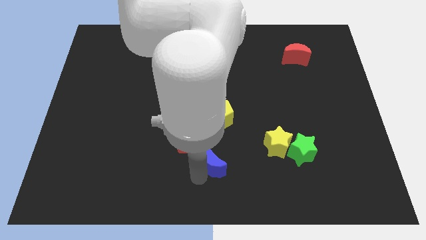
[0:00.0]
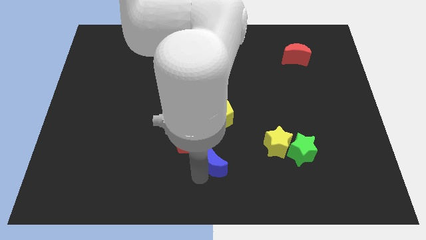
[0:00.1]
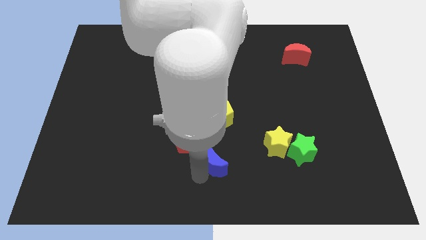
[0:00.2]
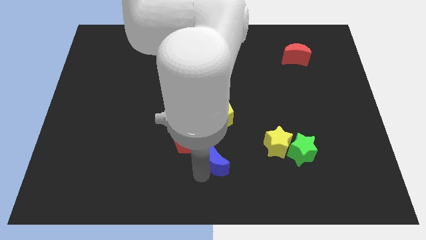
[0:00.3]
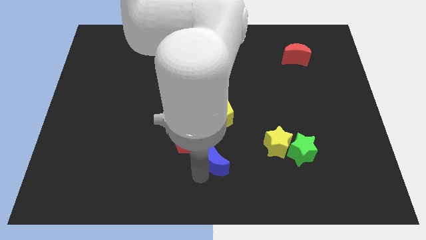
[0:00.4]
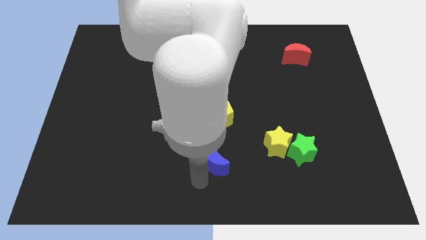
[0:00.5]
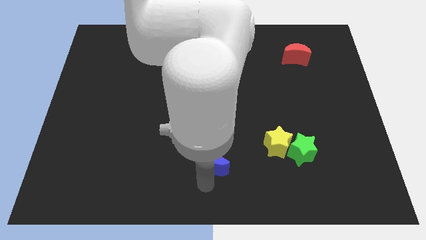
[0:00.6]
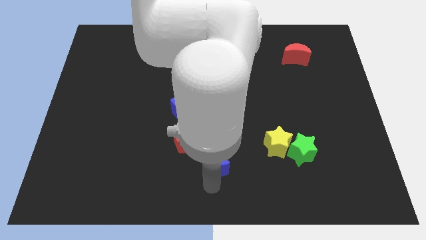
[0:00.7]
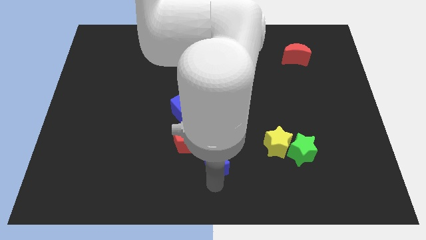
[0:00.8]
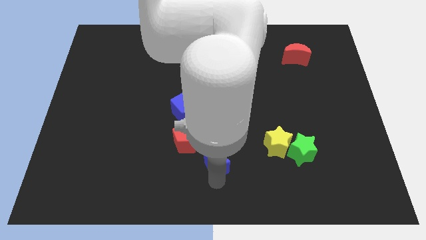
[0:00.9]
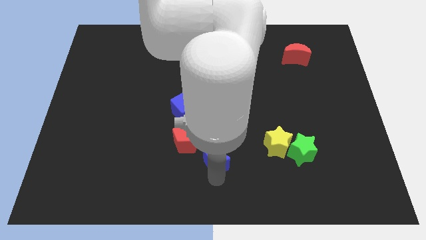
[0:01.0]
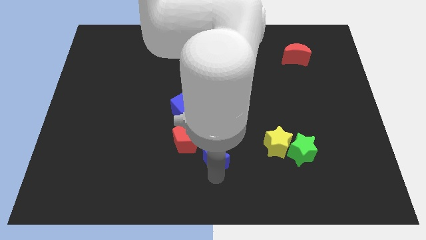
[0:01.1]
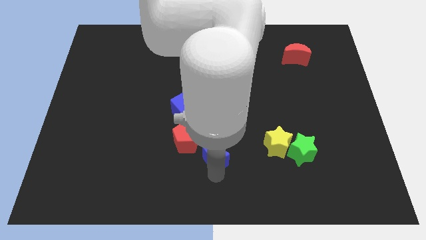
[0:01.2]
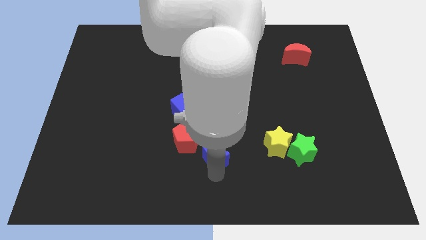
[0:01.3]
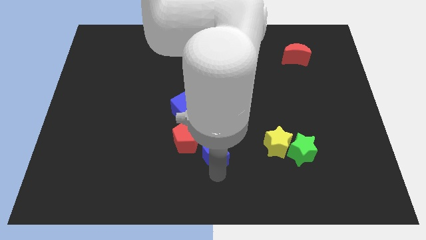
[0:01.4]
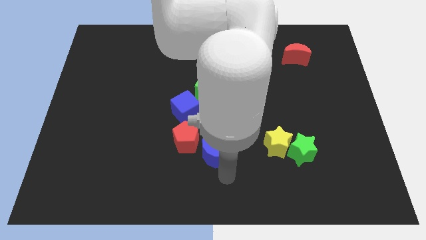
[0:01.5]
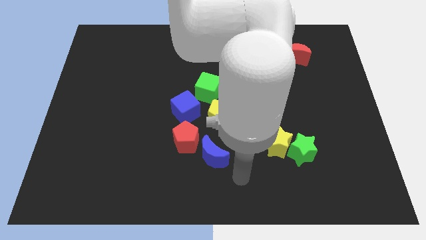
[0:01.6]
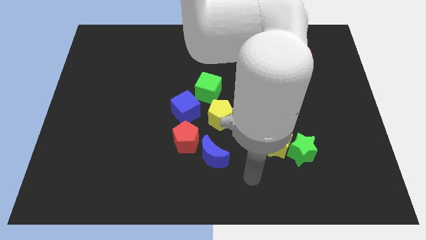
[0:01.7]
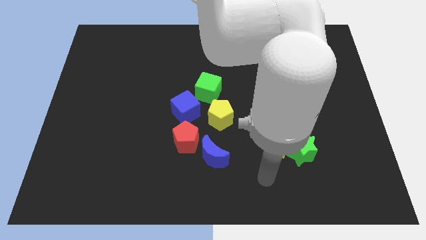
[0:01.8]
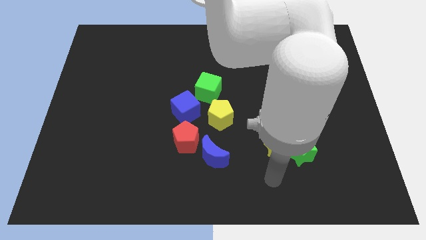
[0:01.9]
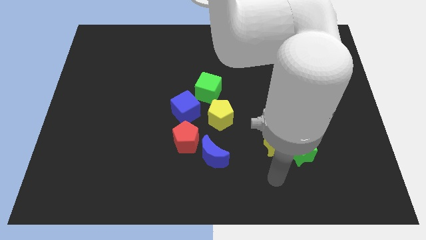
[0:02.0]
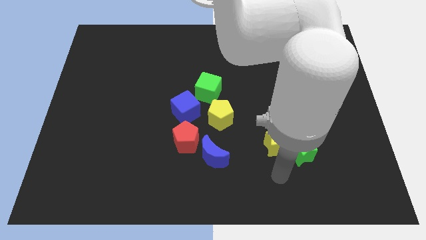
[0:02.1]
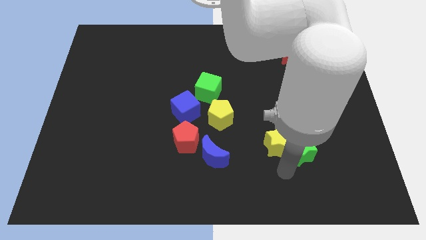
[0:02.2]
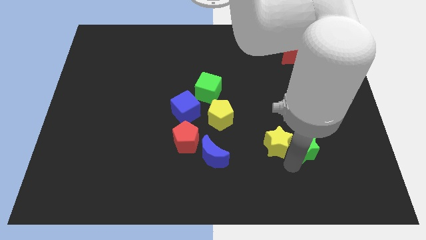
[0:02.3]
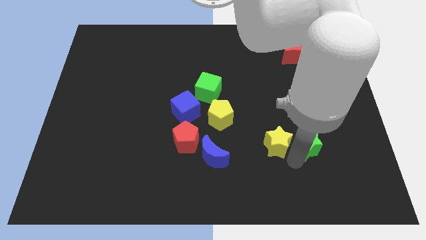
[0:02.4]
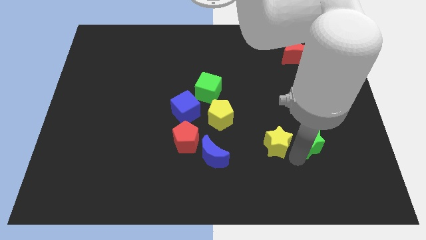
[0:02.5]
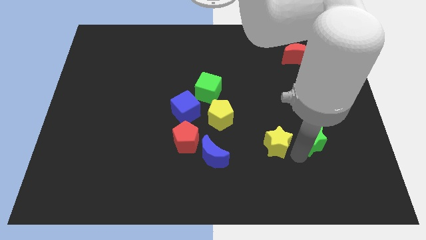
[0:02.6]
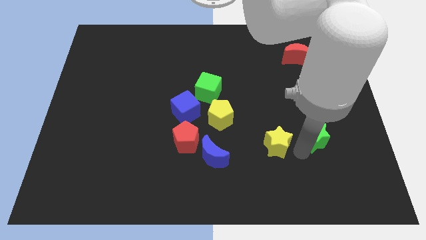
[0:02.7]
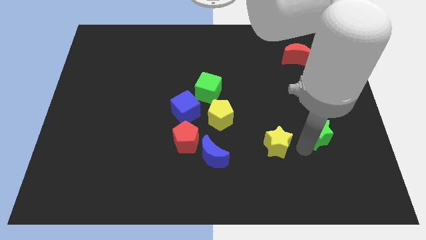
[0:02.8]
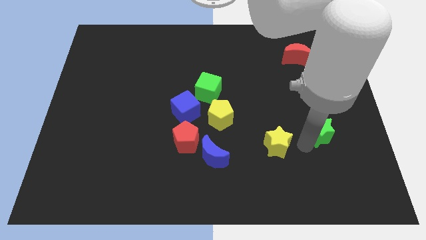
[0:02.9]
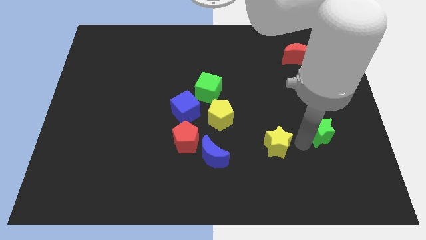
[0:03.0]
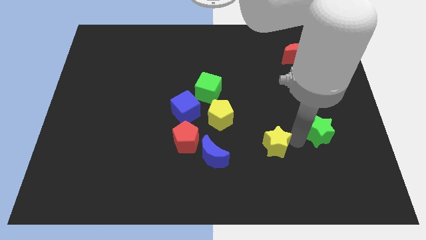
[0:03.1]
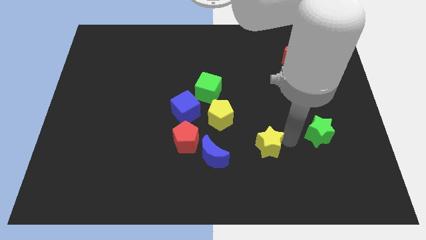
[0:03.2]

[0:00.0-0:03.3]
separate the green star from the yellow star

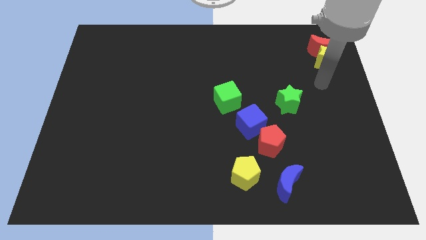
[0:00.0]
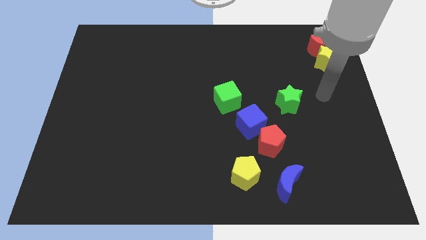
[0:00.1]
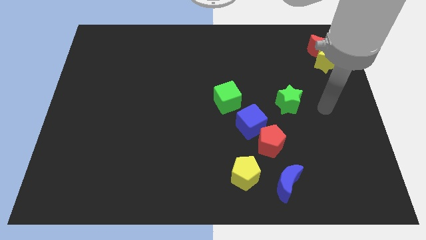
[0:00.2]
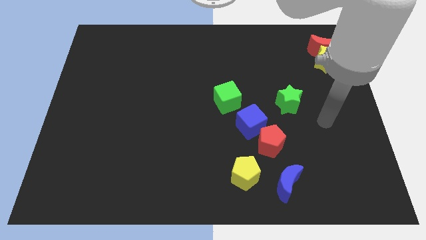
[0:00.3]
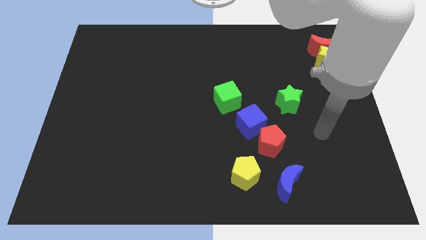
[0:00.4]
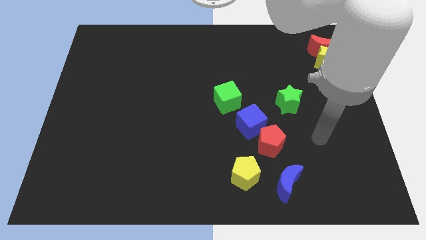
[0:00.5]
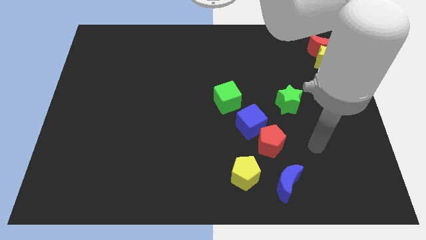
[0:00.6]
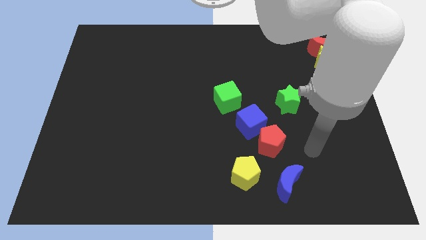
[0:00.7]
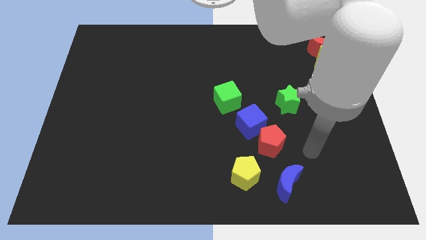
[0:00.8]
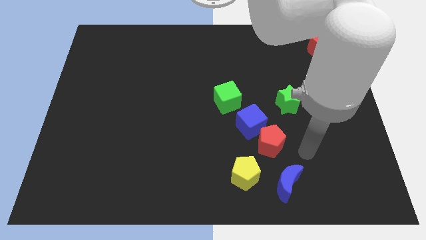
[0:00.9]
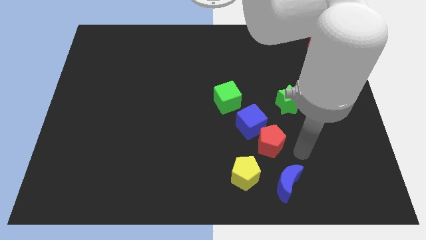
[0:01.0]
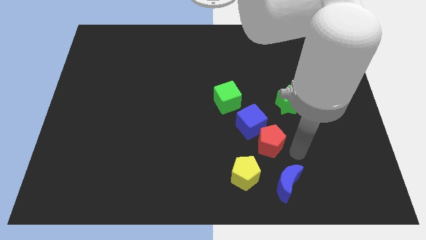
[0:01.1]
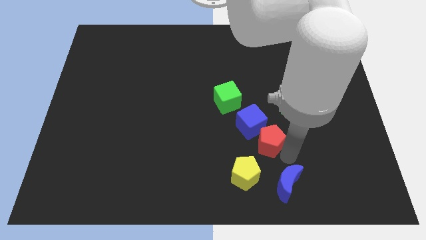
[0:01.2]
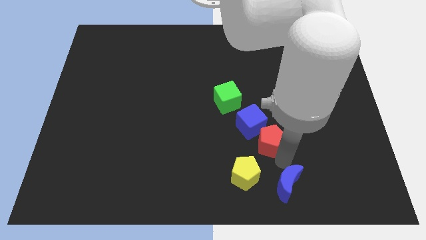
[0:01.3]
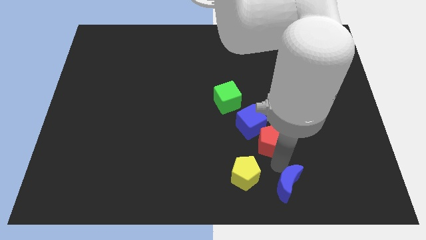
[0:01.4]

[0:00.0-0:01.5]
point the arm in between the red pentagon and the blue moon

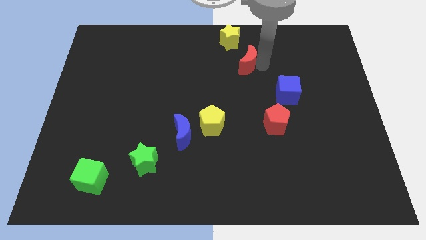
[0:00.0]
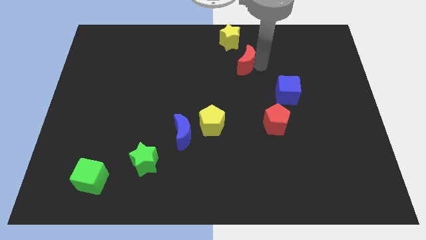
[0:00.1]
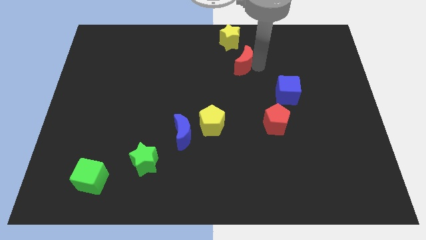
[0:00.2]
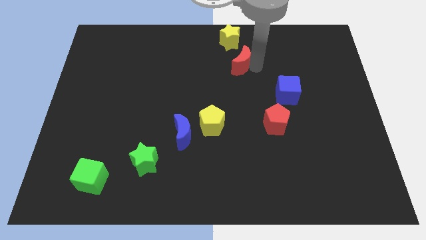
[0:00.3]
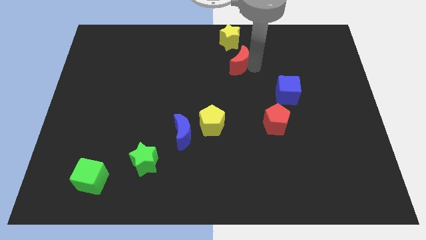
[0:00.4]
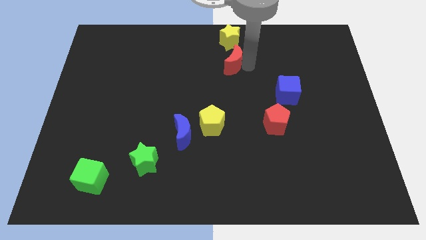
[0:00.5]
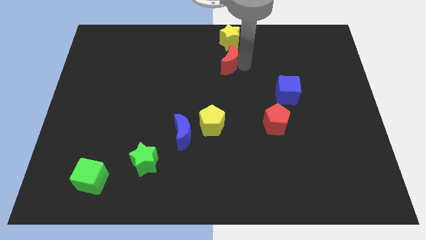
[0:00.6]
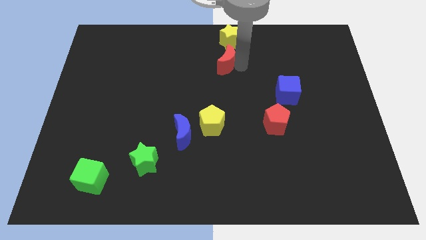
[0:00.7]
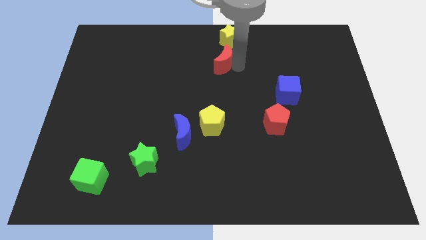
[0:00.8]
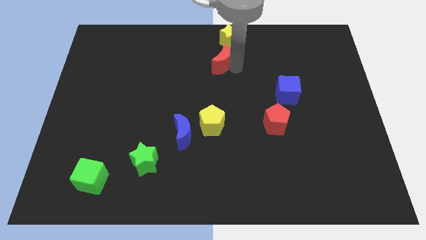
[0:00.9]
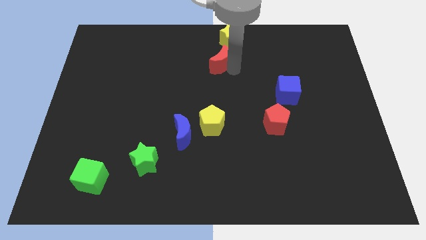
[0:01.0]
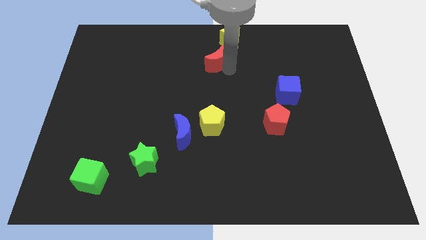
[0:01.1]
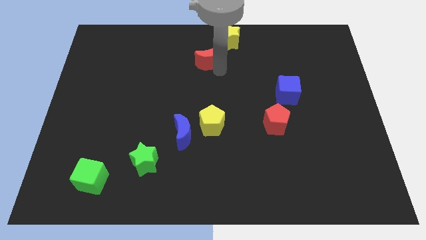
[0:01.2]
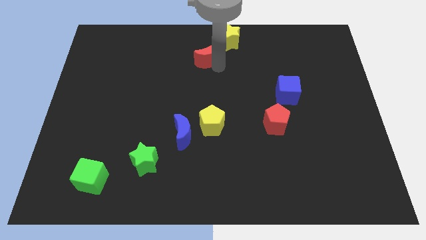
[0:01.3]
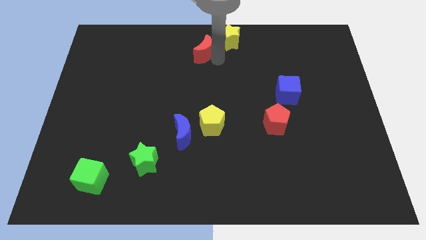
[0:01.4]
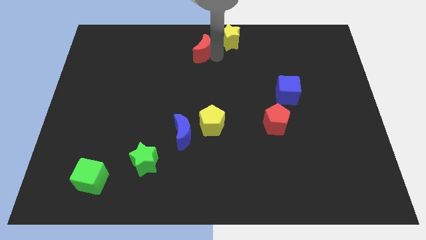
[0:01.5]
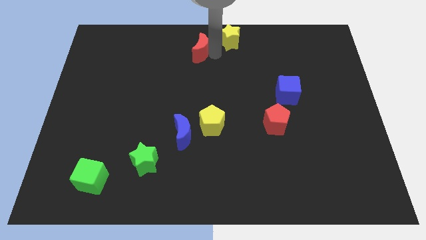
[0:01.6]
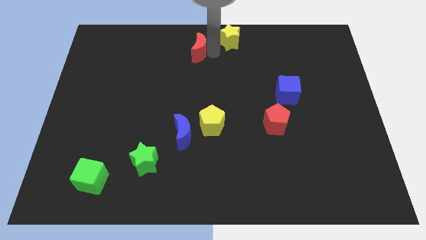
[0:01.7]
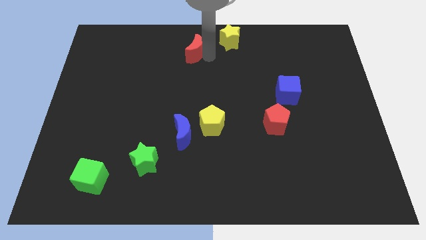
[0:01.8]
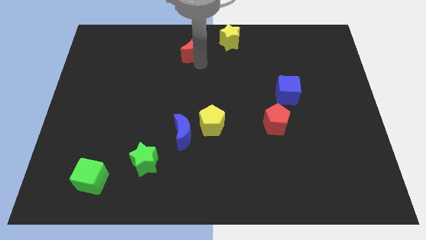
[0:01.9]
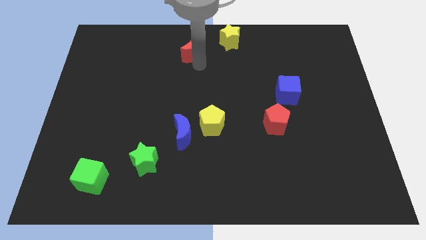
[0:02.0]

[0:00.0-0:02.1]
slide the red moon diagonally bottom left to the yellow star

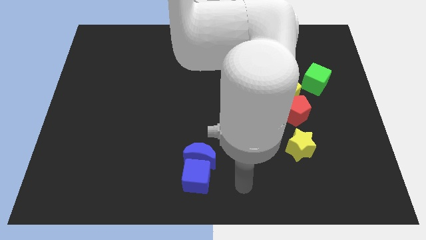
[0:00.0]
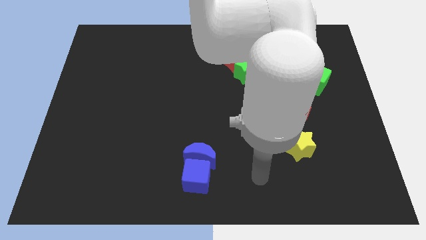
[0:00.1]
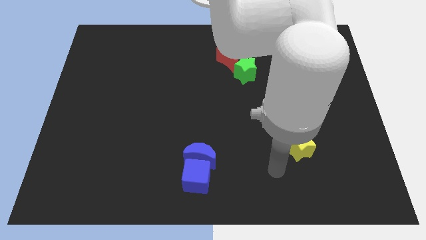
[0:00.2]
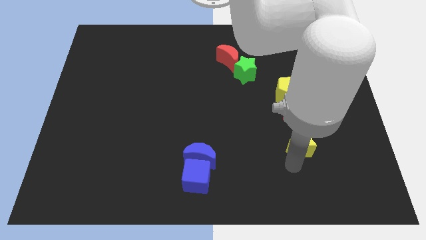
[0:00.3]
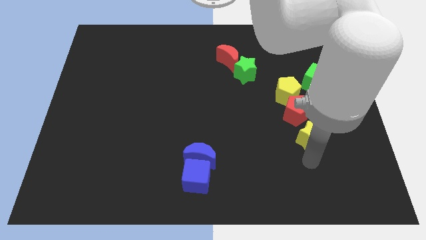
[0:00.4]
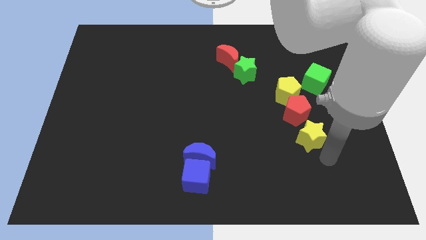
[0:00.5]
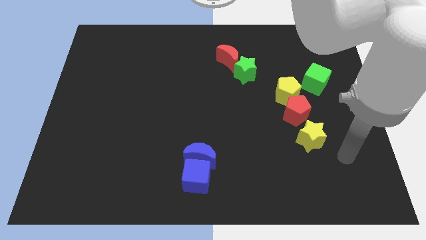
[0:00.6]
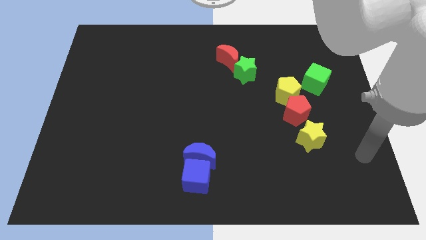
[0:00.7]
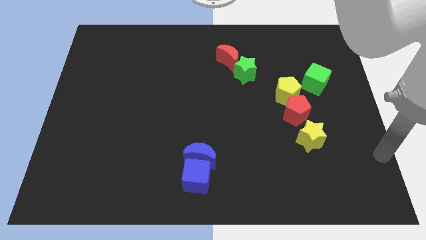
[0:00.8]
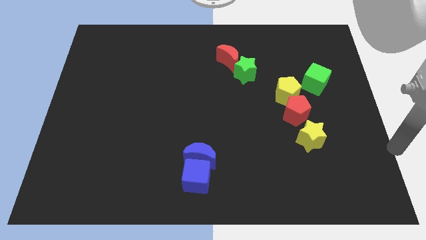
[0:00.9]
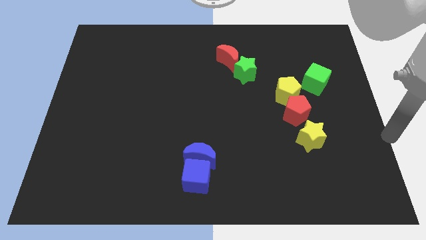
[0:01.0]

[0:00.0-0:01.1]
push the yellow star slightly towards the right

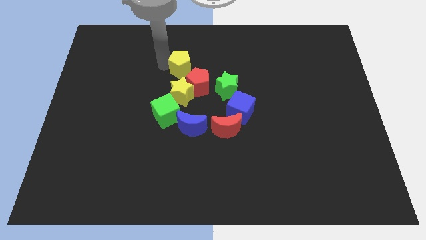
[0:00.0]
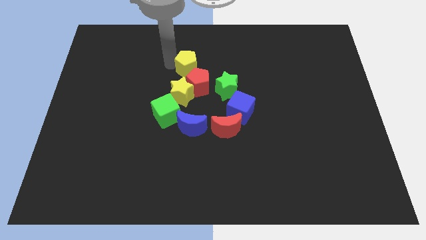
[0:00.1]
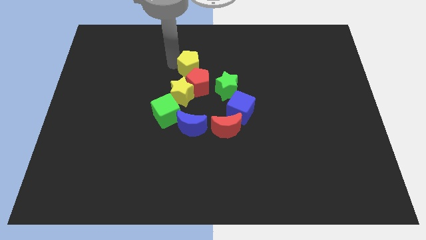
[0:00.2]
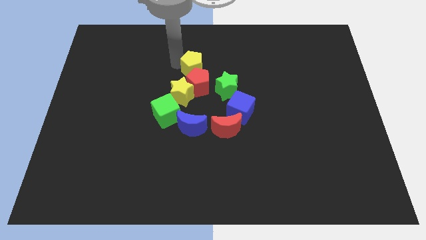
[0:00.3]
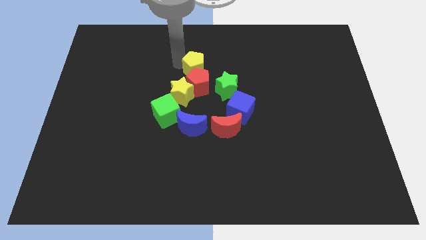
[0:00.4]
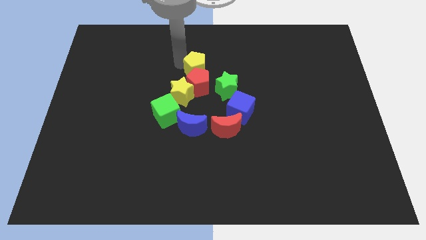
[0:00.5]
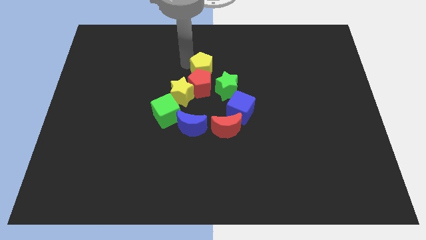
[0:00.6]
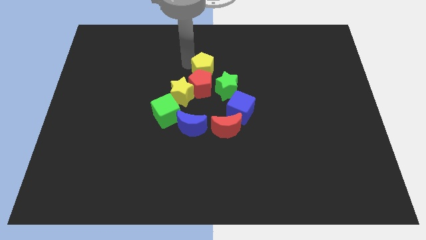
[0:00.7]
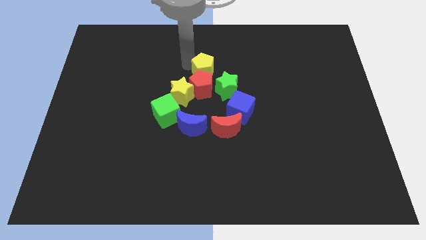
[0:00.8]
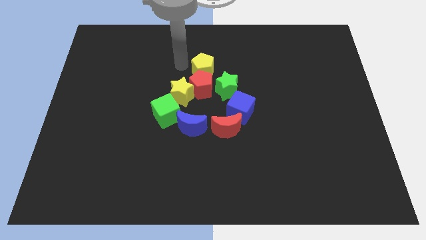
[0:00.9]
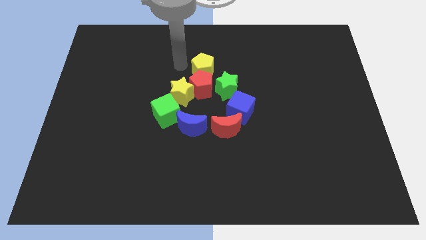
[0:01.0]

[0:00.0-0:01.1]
push yellow pentagon above red pentagon
